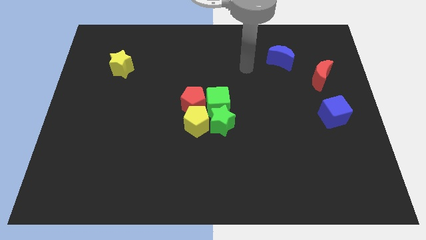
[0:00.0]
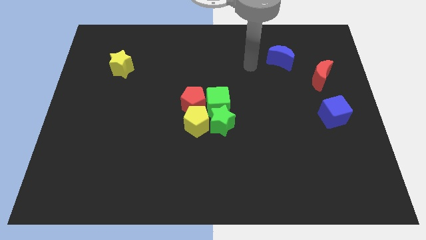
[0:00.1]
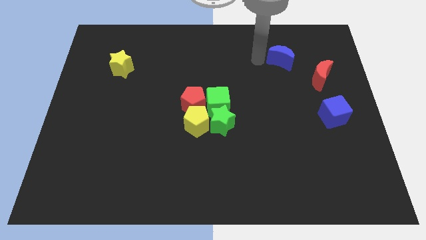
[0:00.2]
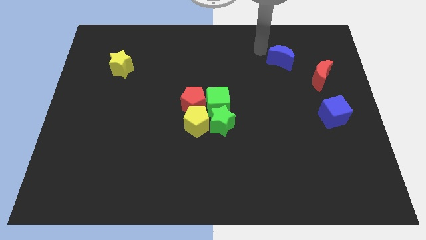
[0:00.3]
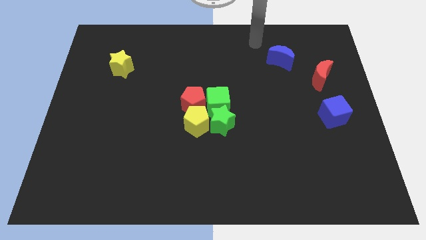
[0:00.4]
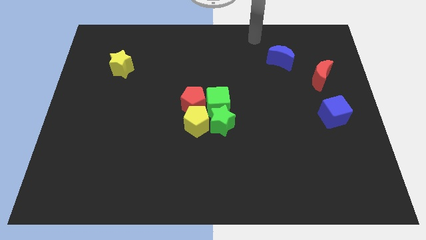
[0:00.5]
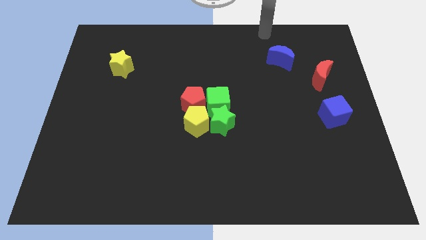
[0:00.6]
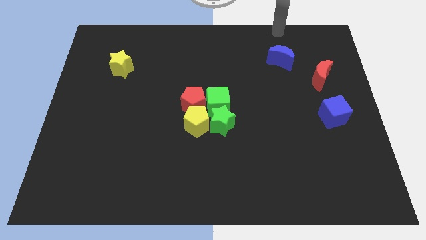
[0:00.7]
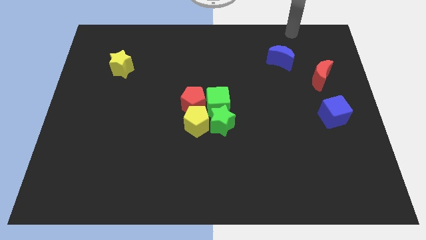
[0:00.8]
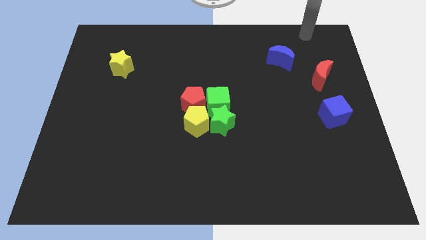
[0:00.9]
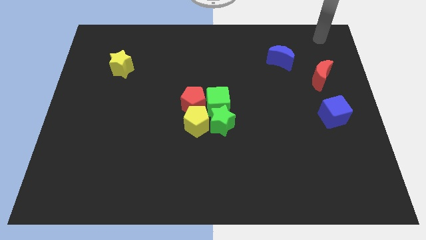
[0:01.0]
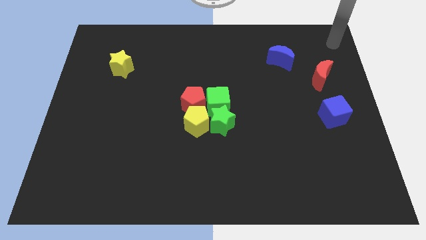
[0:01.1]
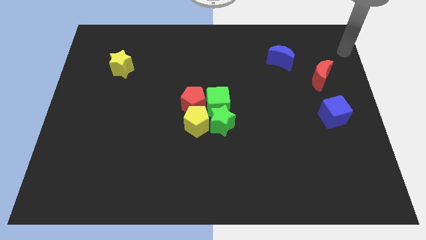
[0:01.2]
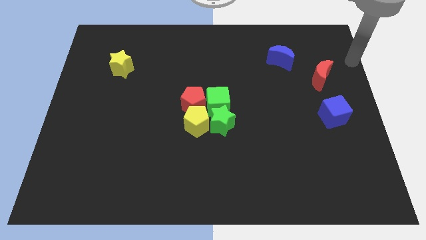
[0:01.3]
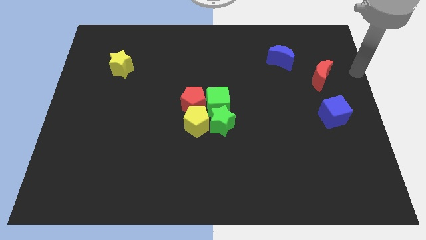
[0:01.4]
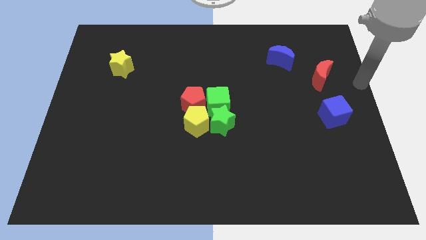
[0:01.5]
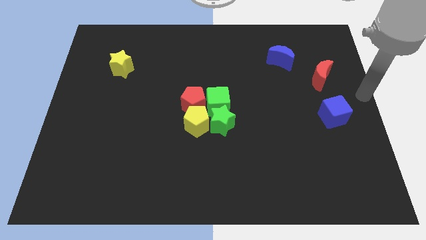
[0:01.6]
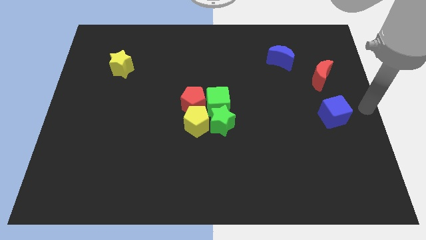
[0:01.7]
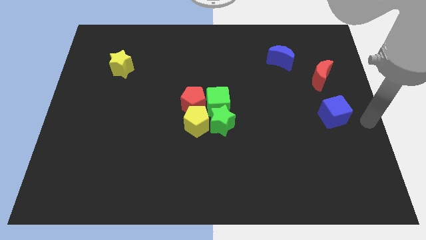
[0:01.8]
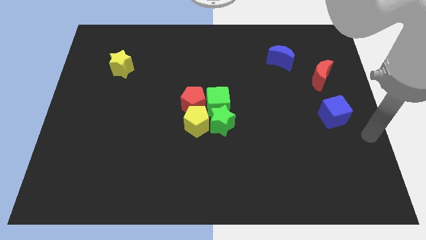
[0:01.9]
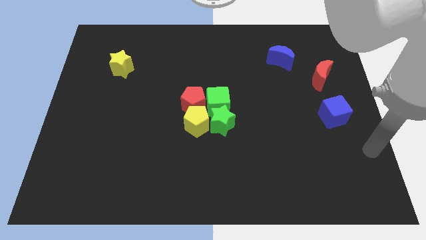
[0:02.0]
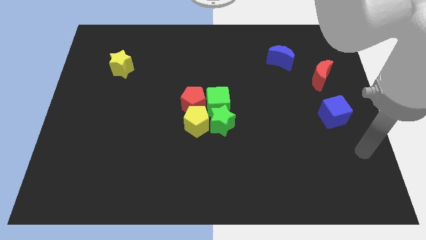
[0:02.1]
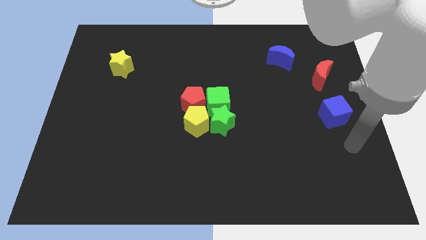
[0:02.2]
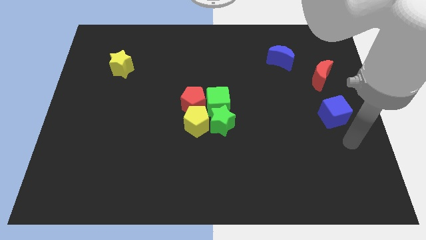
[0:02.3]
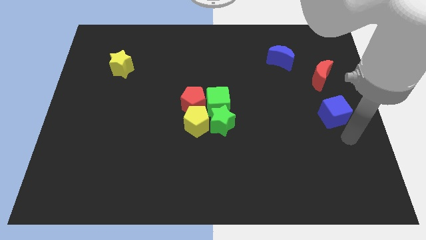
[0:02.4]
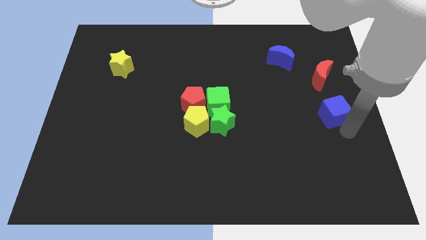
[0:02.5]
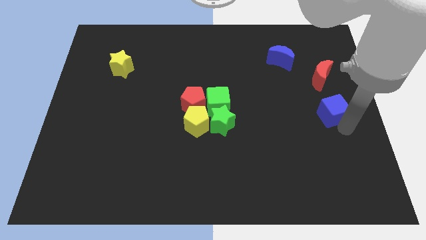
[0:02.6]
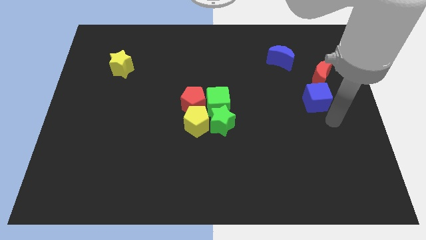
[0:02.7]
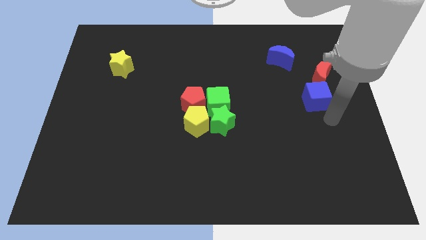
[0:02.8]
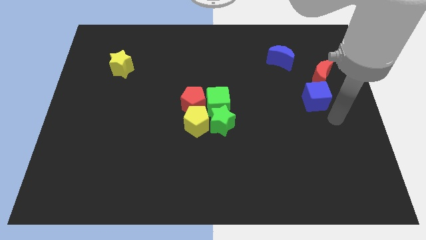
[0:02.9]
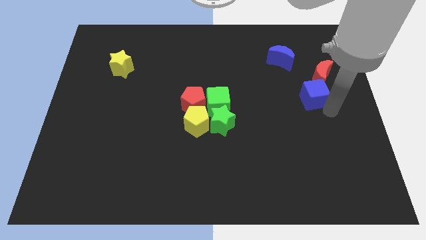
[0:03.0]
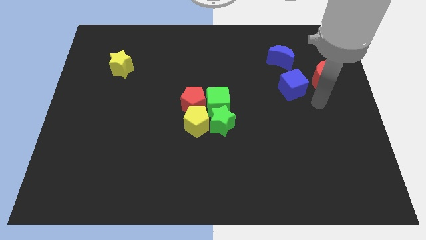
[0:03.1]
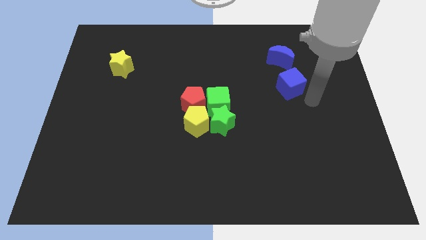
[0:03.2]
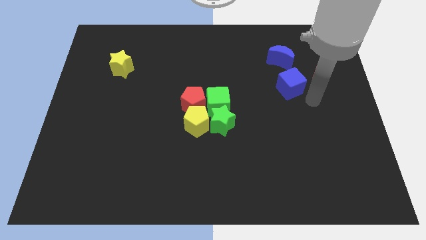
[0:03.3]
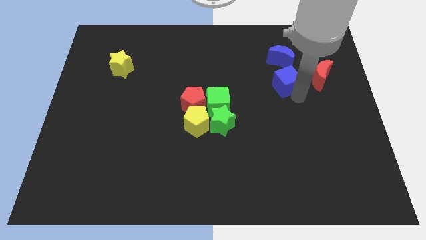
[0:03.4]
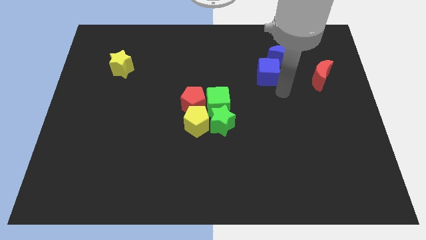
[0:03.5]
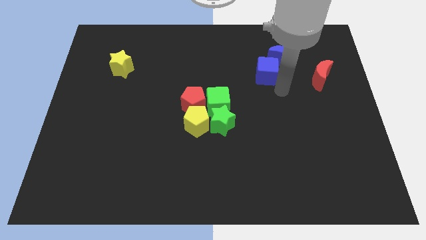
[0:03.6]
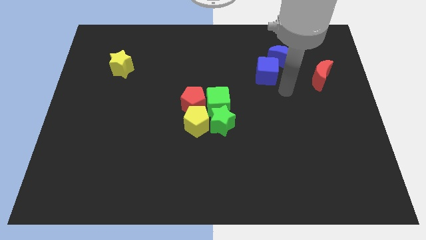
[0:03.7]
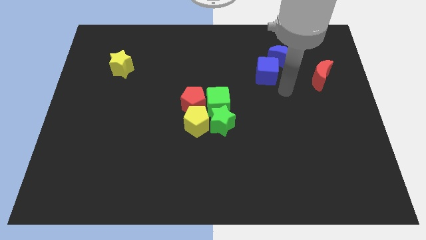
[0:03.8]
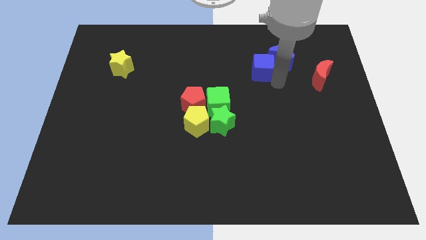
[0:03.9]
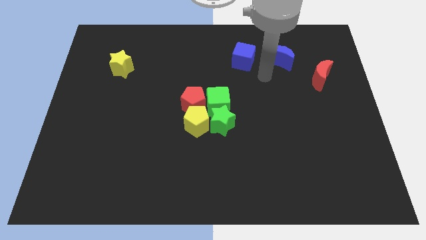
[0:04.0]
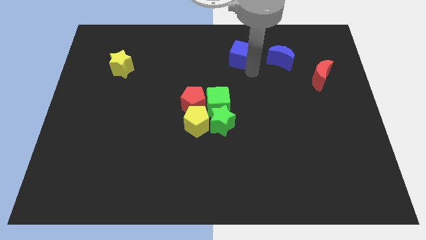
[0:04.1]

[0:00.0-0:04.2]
push the blue cube to the left of the blue crescent

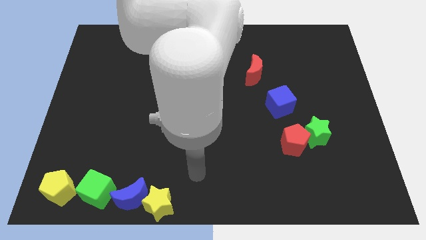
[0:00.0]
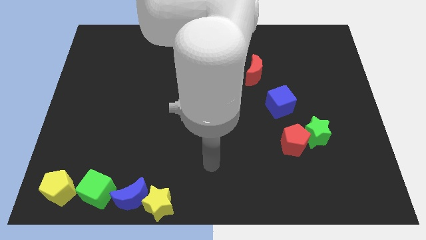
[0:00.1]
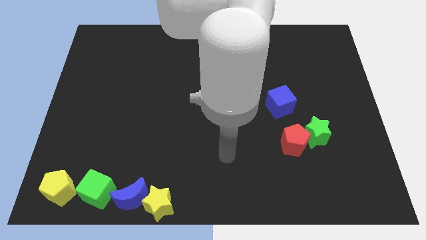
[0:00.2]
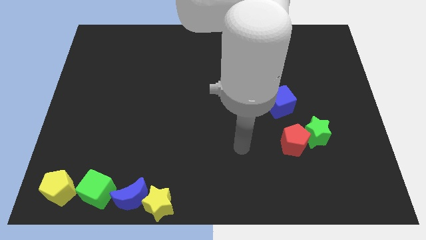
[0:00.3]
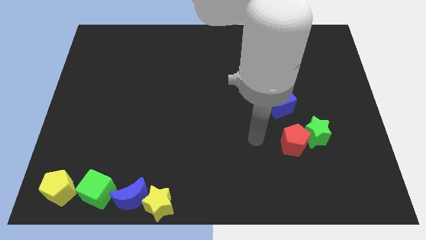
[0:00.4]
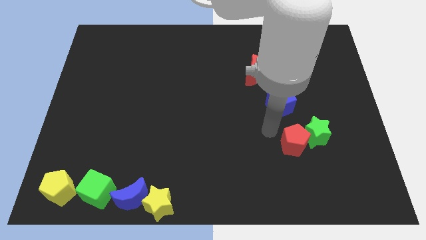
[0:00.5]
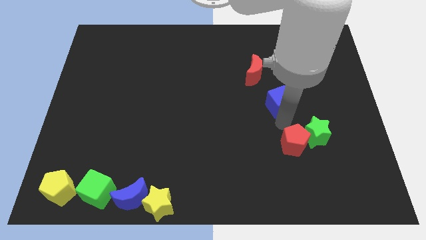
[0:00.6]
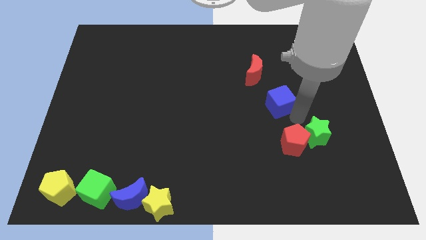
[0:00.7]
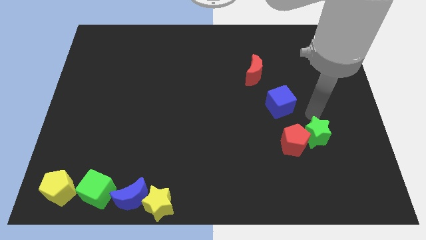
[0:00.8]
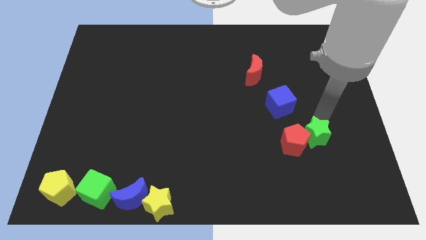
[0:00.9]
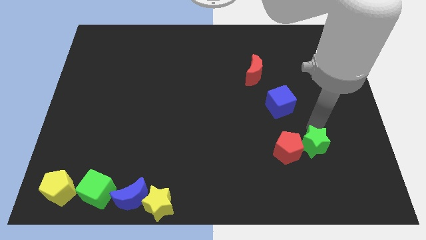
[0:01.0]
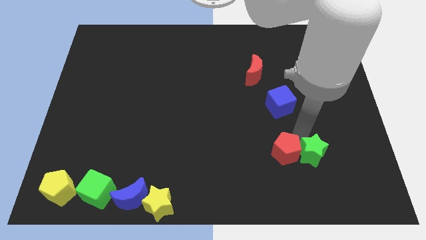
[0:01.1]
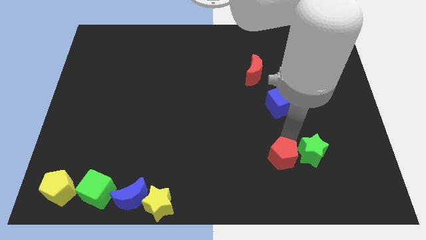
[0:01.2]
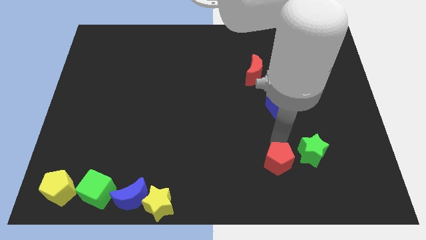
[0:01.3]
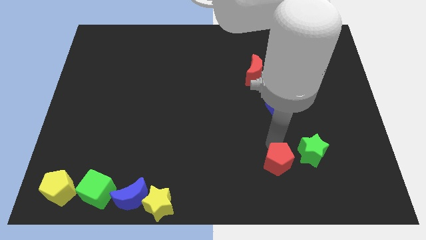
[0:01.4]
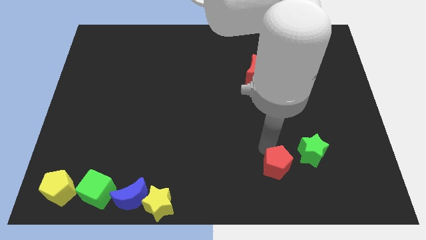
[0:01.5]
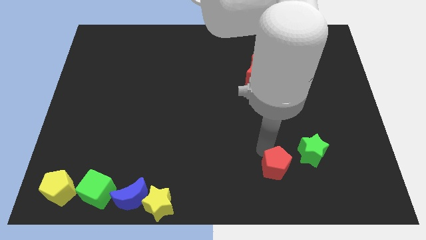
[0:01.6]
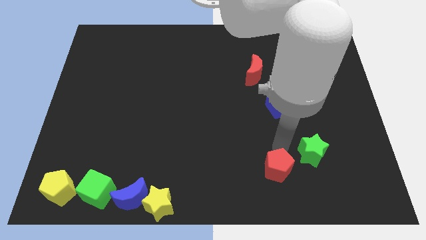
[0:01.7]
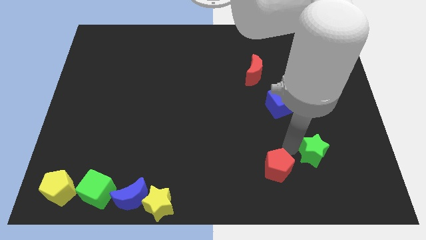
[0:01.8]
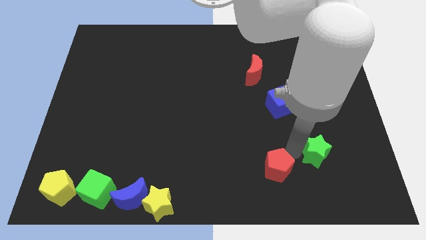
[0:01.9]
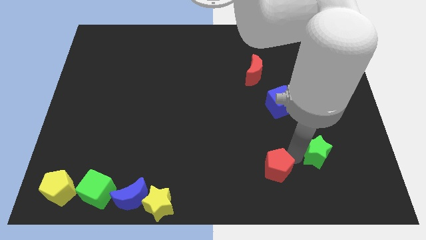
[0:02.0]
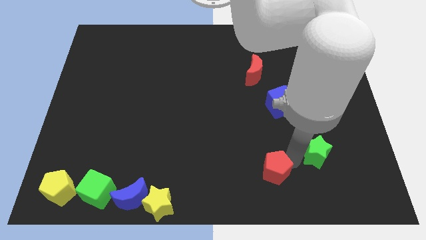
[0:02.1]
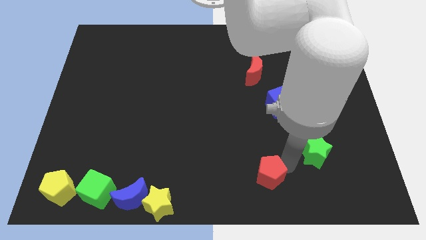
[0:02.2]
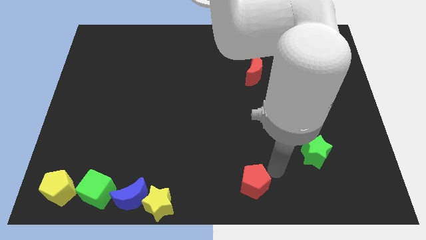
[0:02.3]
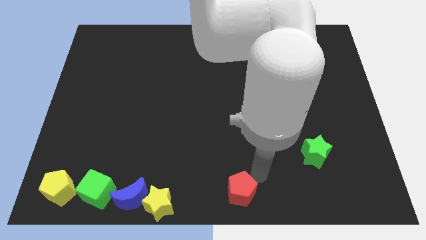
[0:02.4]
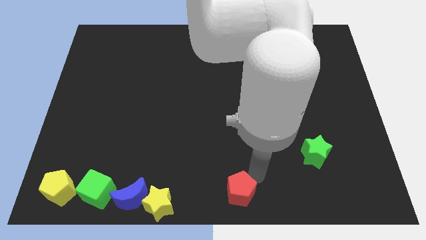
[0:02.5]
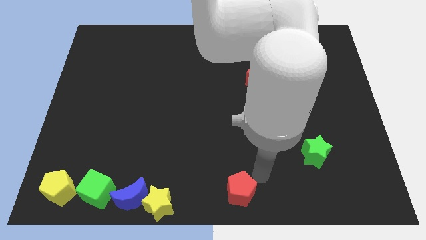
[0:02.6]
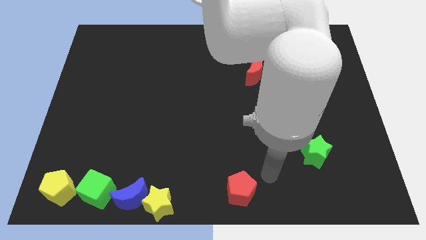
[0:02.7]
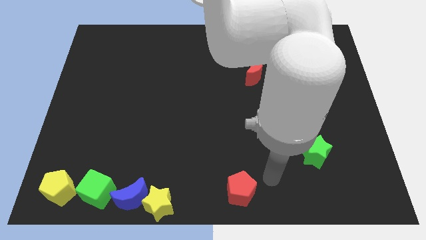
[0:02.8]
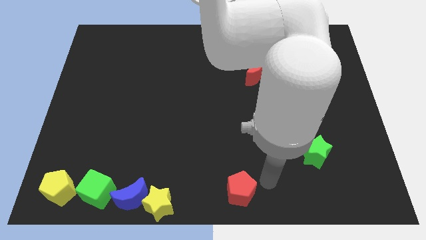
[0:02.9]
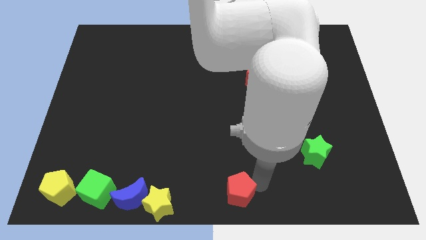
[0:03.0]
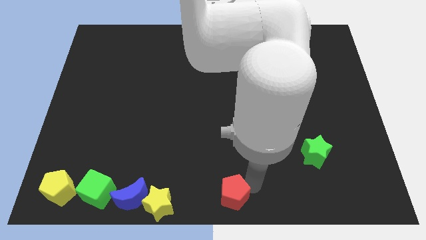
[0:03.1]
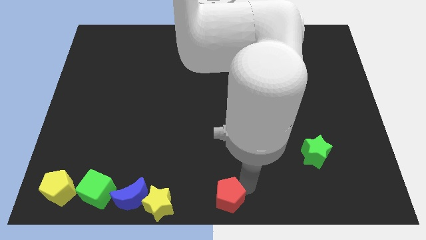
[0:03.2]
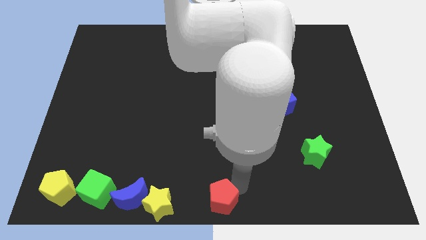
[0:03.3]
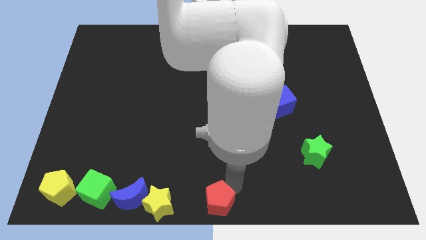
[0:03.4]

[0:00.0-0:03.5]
move the red pentagon to the bottom center of the board

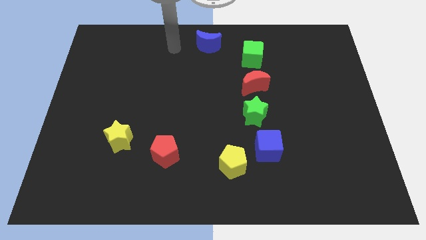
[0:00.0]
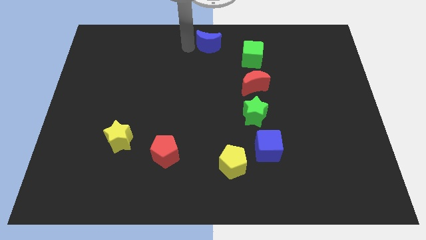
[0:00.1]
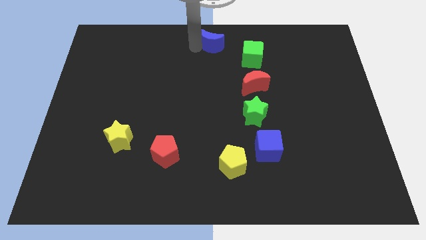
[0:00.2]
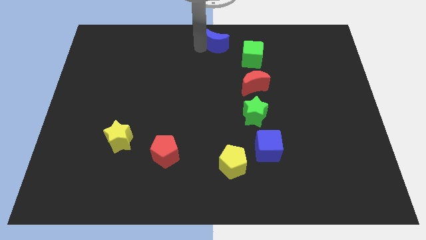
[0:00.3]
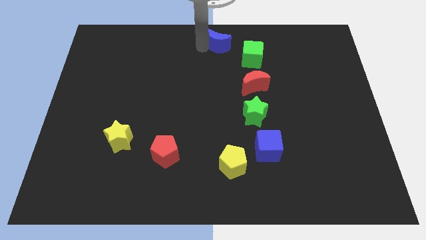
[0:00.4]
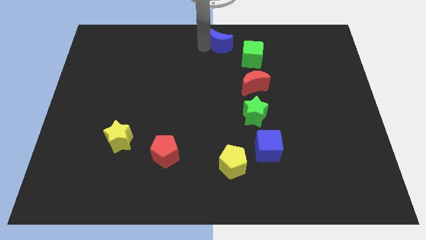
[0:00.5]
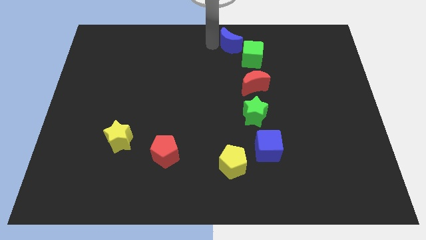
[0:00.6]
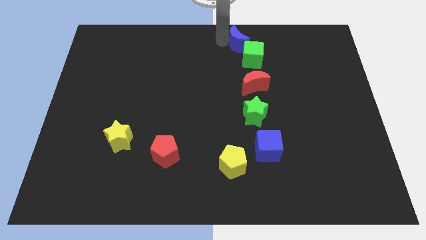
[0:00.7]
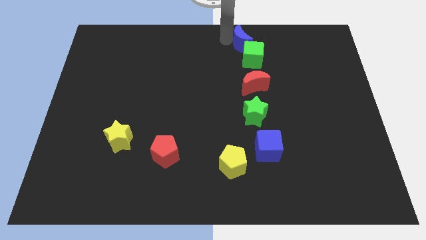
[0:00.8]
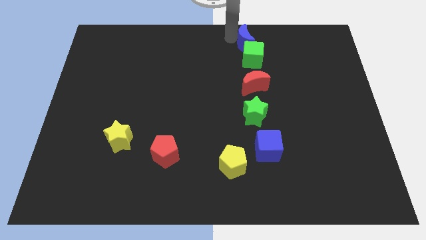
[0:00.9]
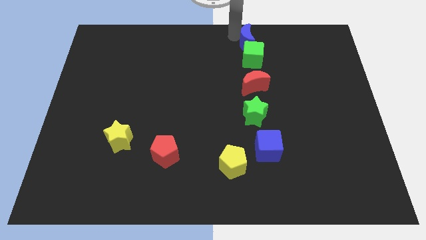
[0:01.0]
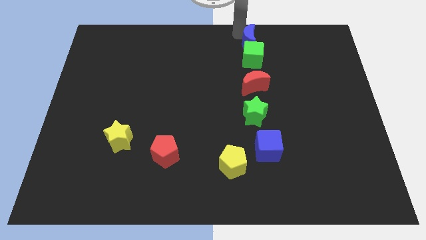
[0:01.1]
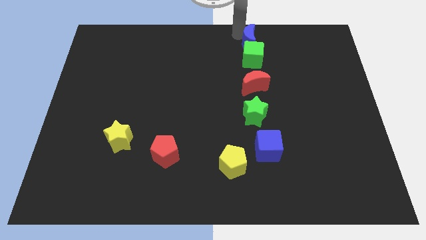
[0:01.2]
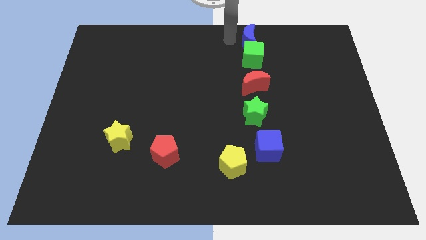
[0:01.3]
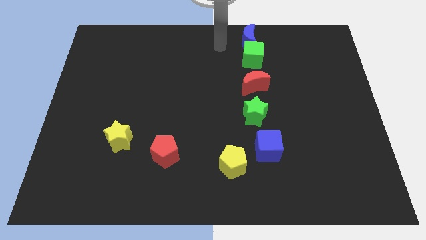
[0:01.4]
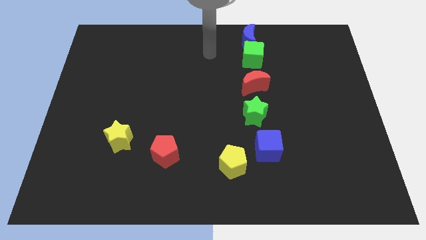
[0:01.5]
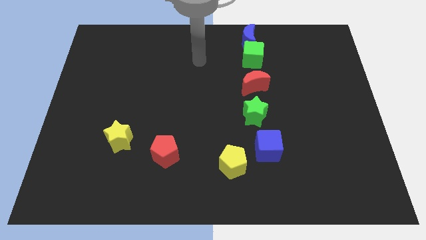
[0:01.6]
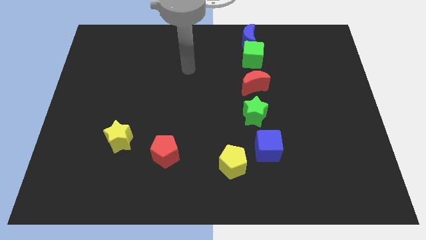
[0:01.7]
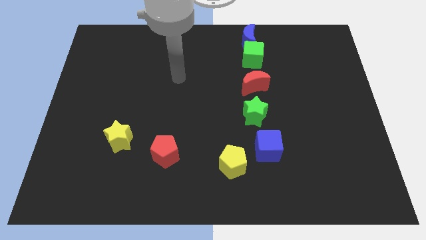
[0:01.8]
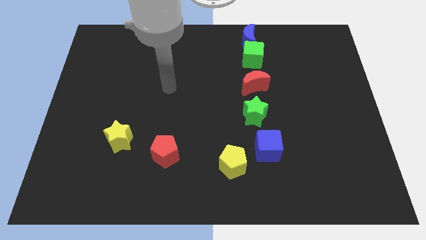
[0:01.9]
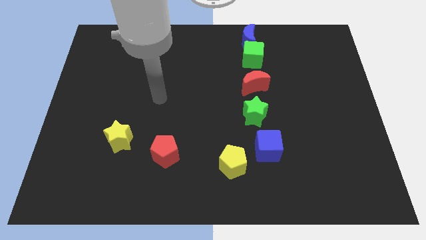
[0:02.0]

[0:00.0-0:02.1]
place the blue crescent on top of green cube
